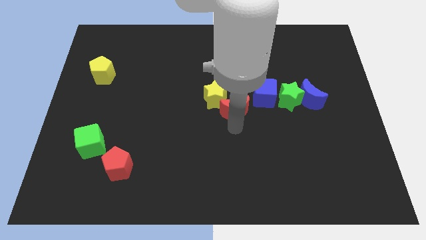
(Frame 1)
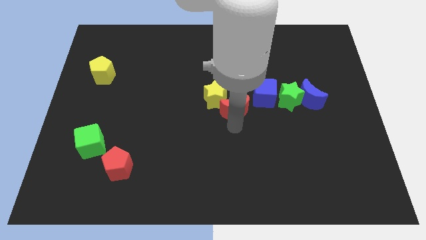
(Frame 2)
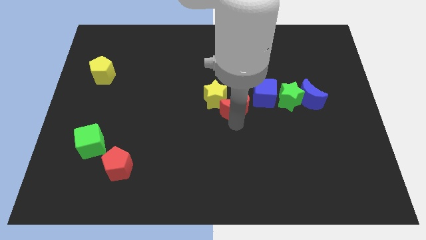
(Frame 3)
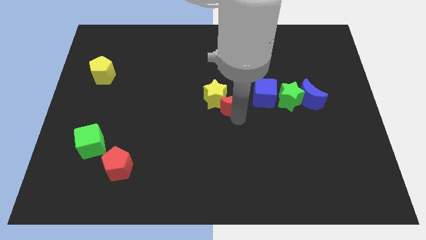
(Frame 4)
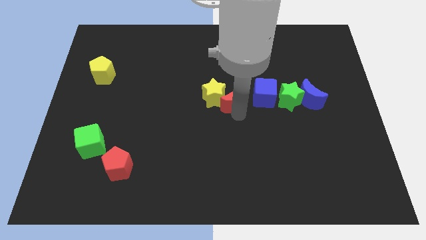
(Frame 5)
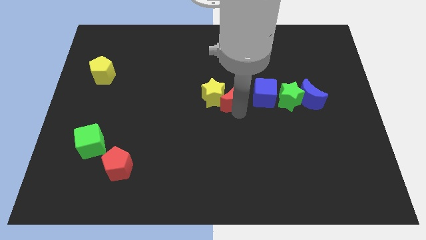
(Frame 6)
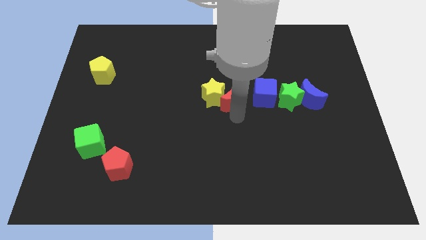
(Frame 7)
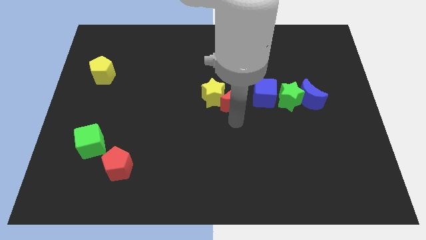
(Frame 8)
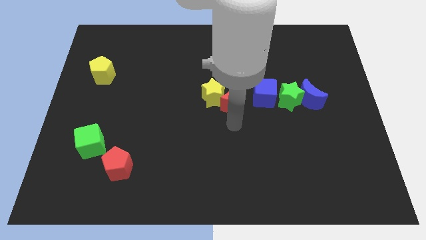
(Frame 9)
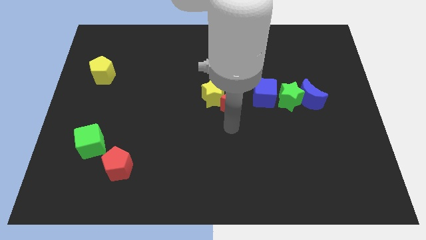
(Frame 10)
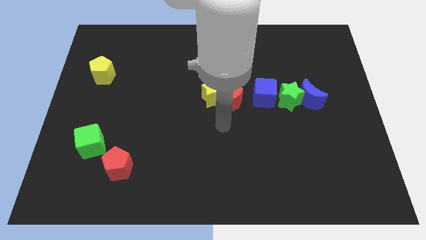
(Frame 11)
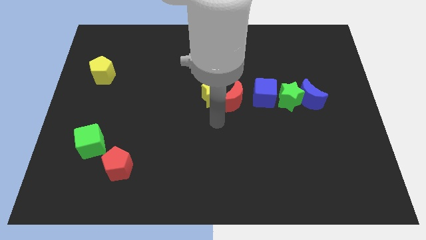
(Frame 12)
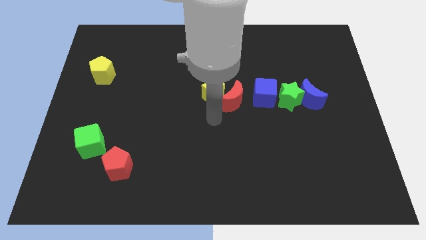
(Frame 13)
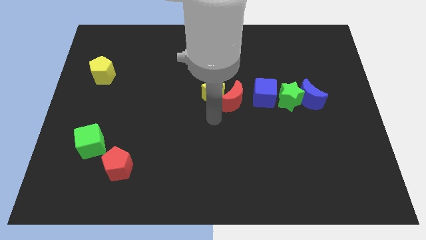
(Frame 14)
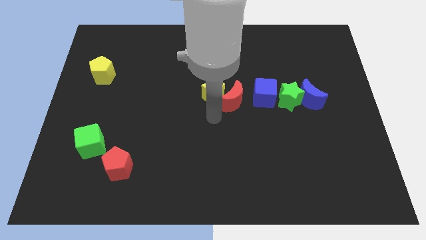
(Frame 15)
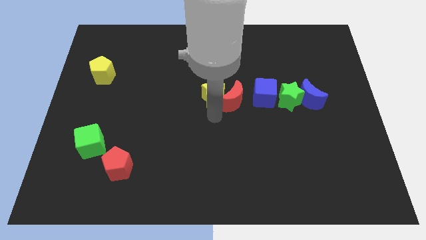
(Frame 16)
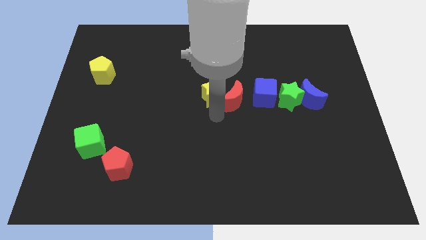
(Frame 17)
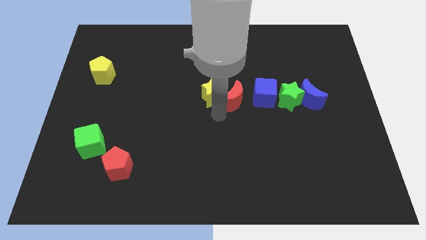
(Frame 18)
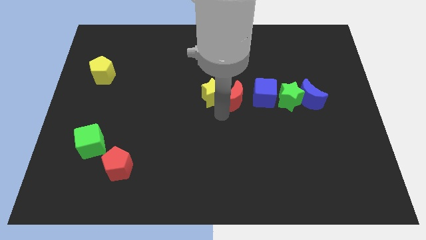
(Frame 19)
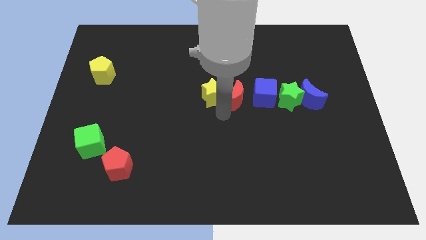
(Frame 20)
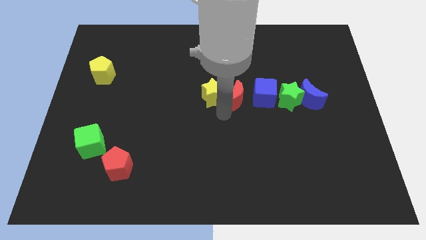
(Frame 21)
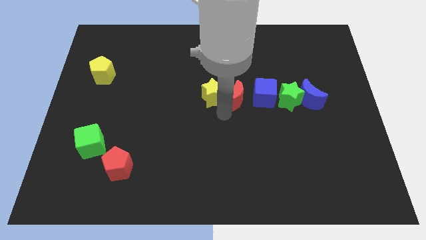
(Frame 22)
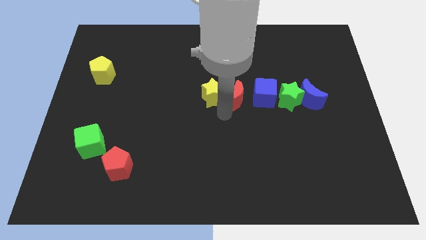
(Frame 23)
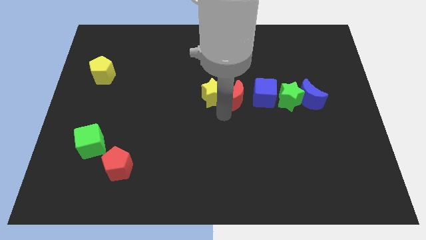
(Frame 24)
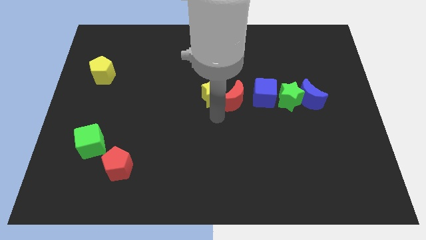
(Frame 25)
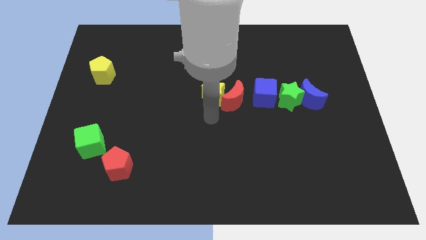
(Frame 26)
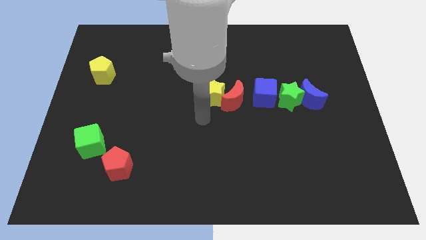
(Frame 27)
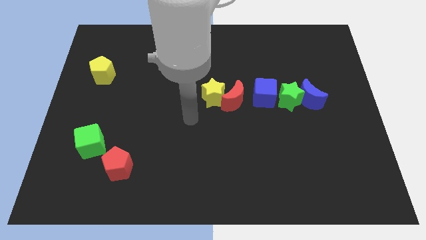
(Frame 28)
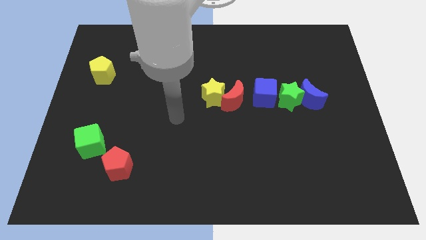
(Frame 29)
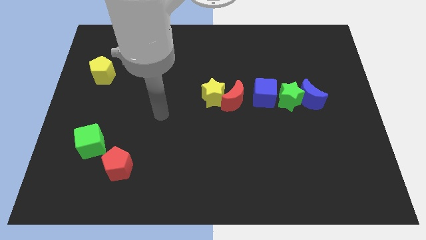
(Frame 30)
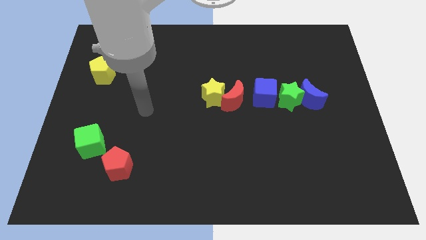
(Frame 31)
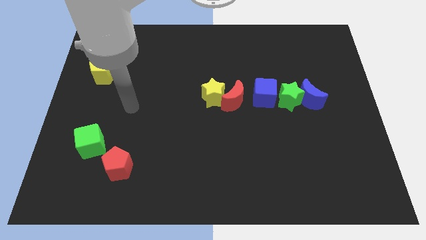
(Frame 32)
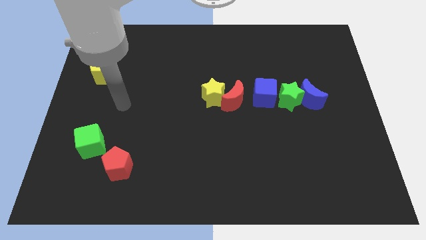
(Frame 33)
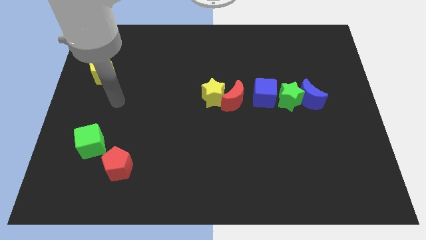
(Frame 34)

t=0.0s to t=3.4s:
place the red crescent right to the yellow star

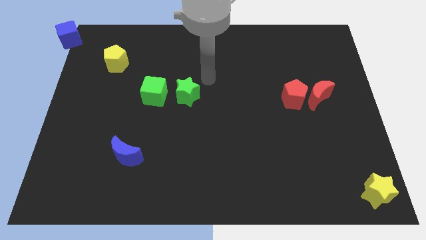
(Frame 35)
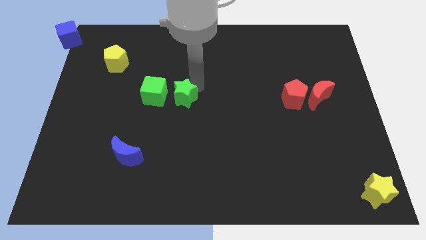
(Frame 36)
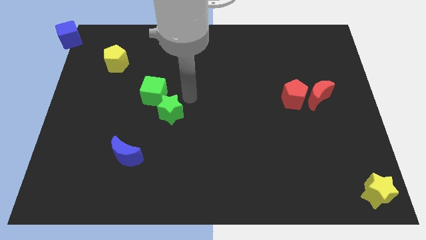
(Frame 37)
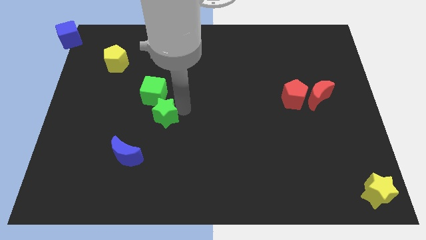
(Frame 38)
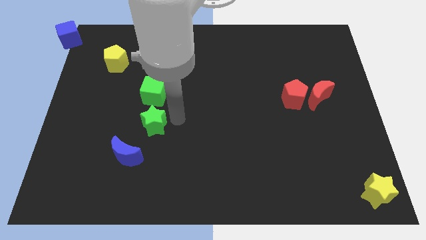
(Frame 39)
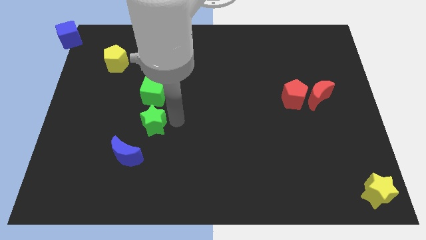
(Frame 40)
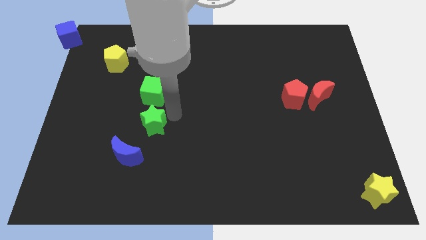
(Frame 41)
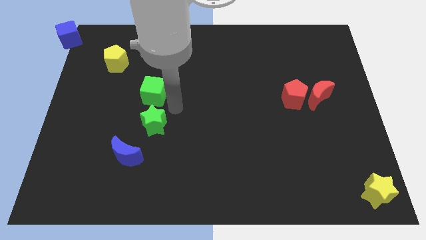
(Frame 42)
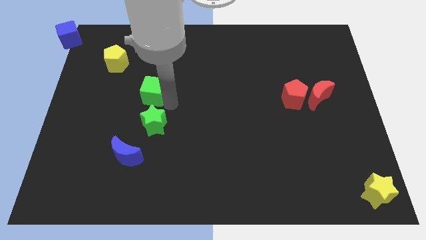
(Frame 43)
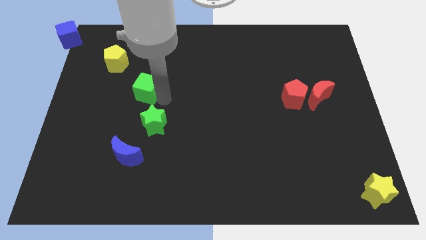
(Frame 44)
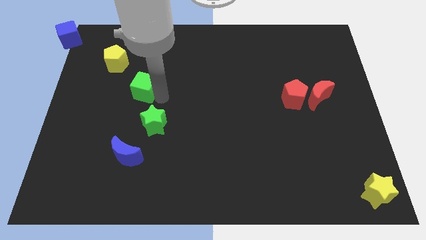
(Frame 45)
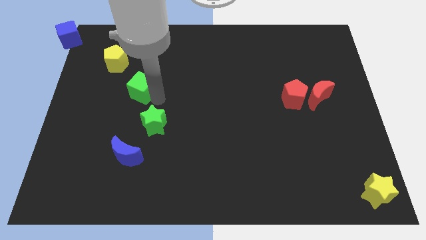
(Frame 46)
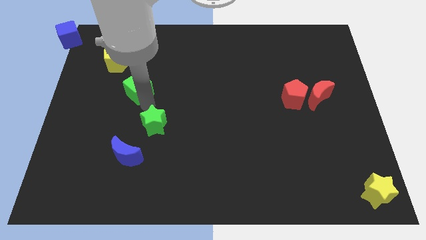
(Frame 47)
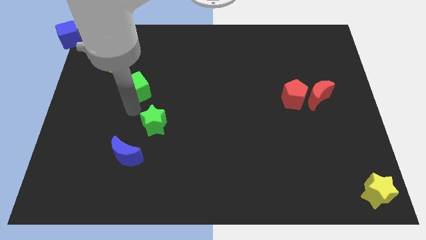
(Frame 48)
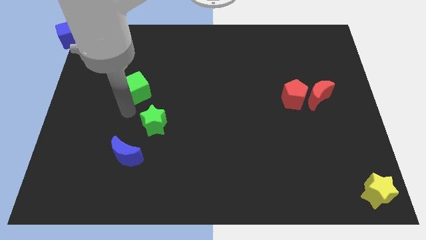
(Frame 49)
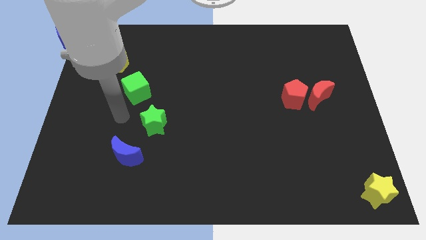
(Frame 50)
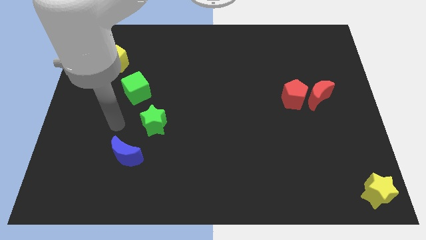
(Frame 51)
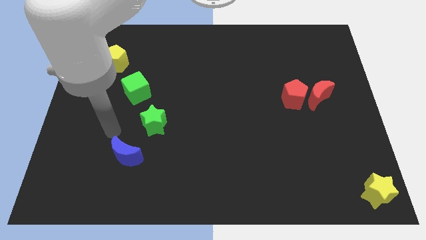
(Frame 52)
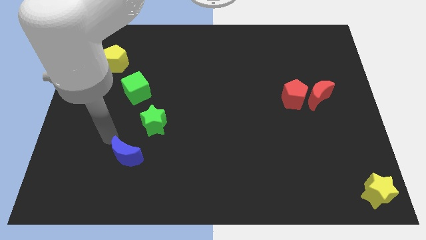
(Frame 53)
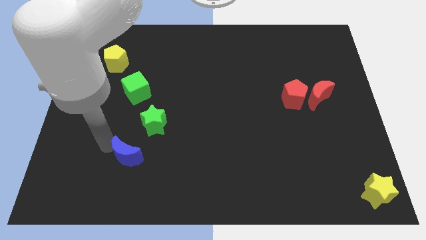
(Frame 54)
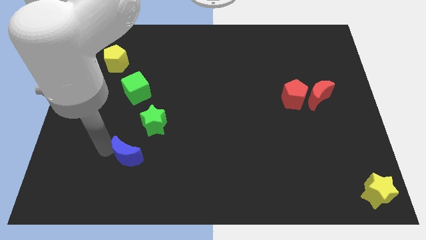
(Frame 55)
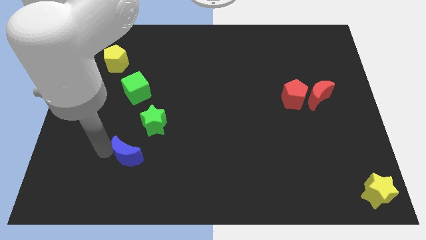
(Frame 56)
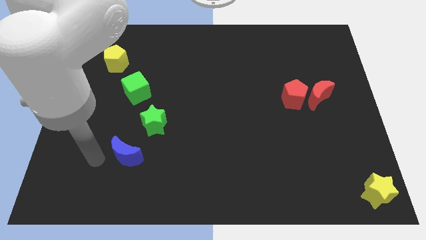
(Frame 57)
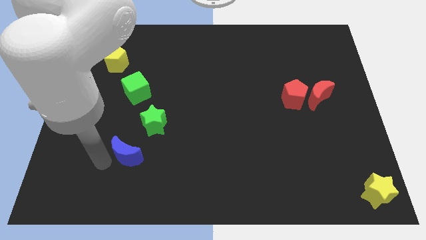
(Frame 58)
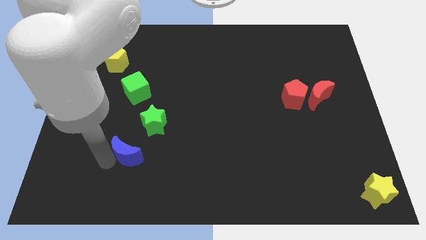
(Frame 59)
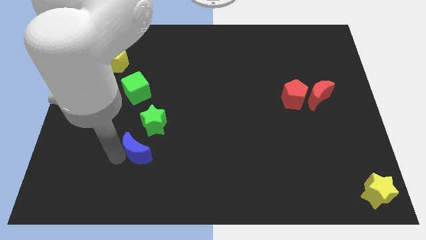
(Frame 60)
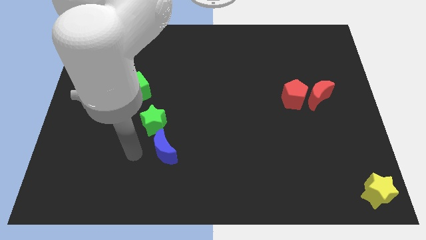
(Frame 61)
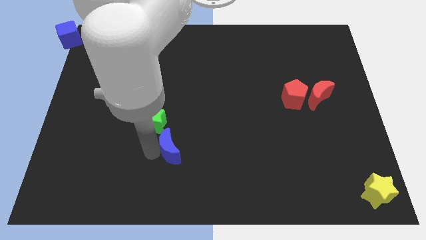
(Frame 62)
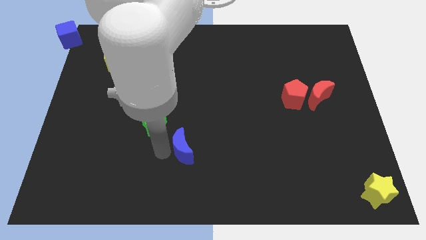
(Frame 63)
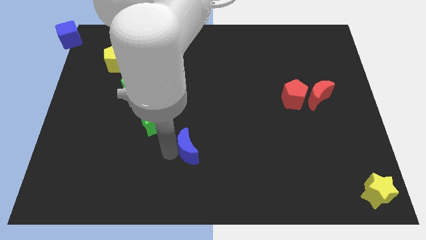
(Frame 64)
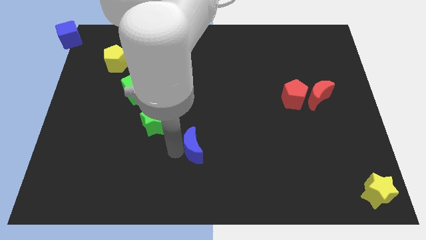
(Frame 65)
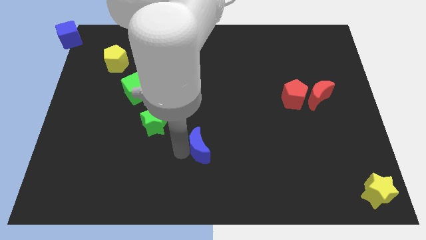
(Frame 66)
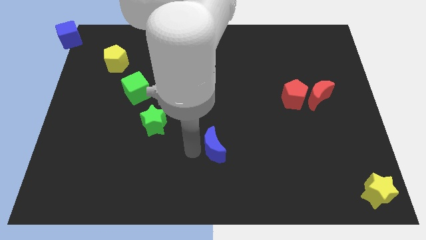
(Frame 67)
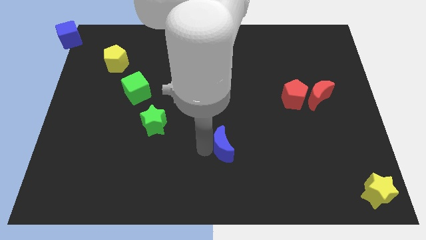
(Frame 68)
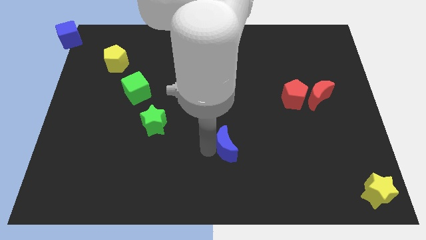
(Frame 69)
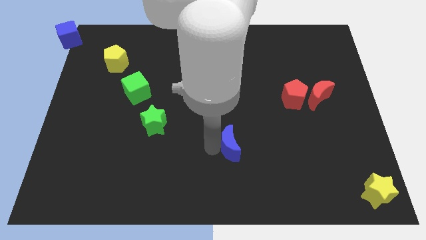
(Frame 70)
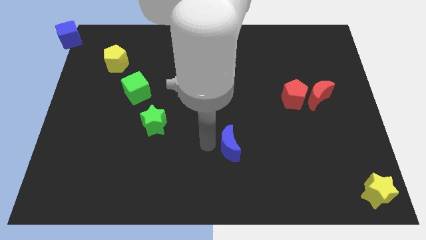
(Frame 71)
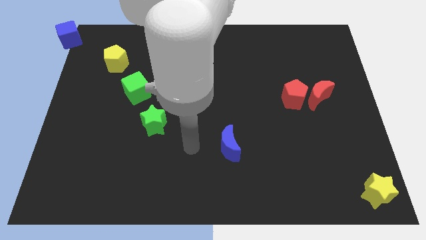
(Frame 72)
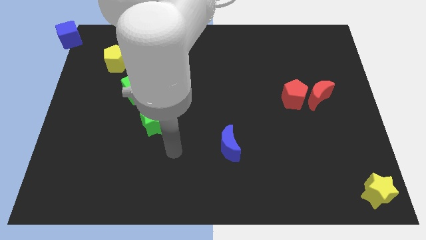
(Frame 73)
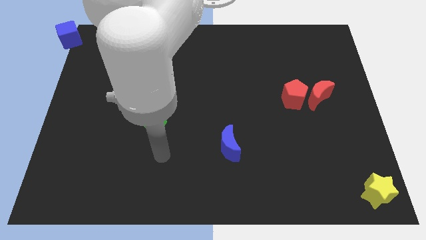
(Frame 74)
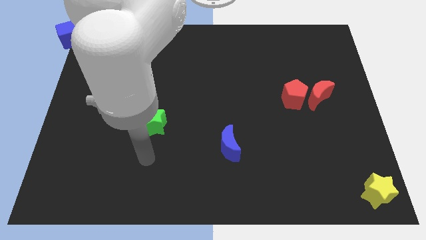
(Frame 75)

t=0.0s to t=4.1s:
move blue moon diagonal to red pentagon

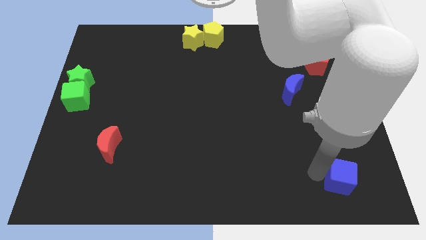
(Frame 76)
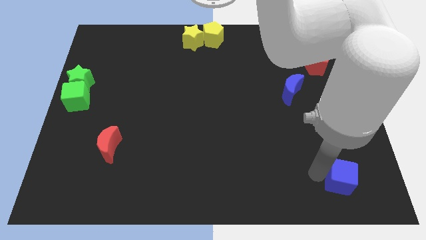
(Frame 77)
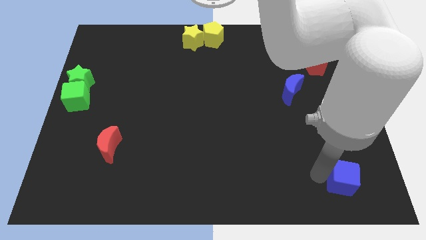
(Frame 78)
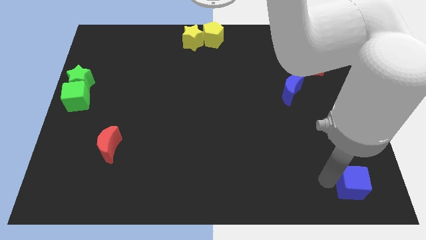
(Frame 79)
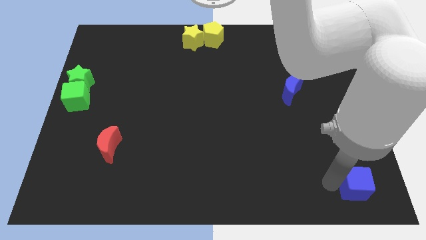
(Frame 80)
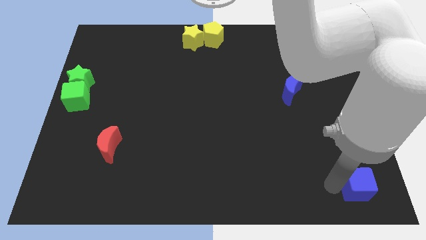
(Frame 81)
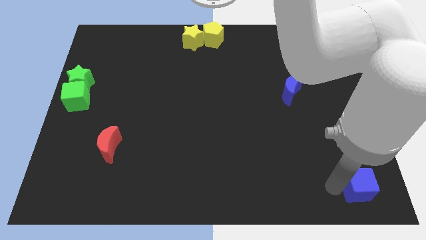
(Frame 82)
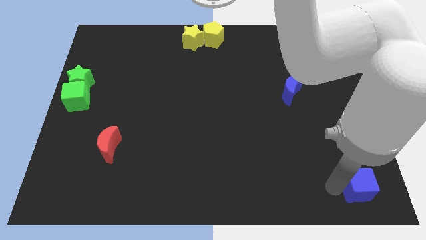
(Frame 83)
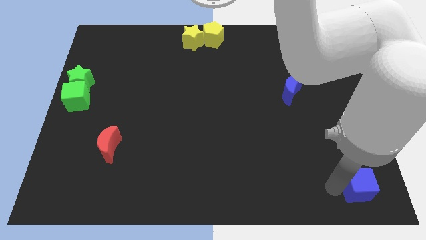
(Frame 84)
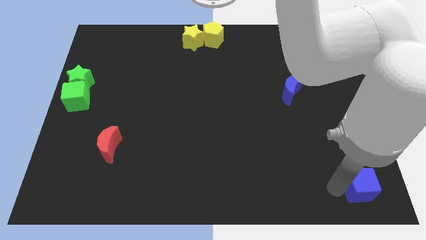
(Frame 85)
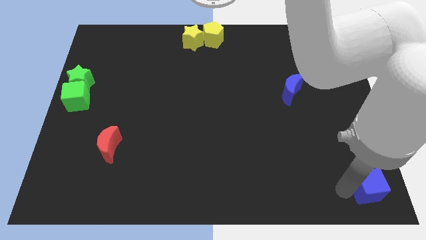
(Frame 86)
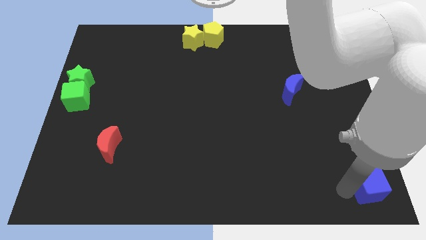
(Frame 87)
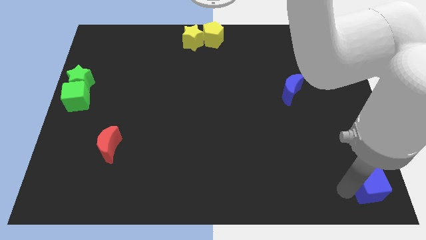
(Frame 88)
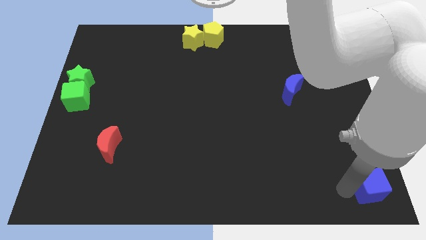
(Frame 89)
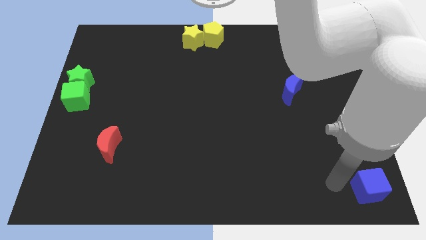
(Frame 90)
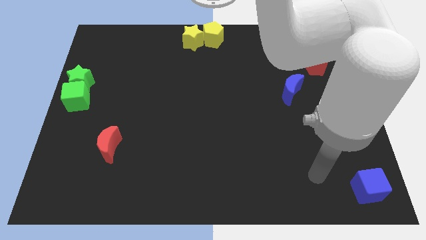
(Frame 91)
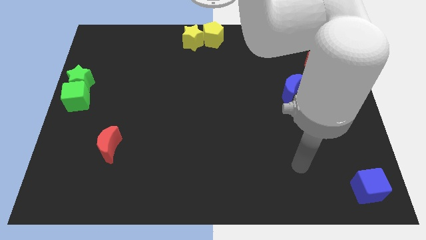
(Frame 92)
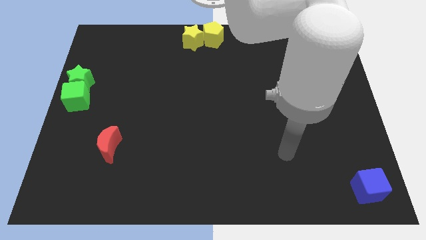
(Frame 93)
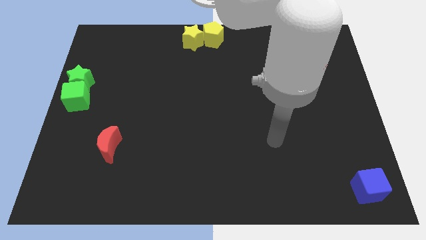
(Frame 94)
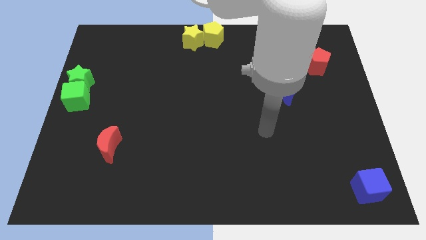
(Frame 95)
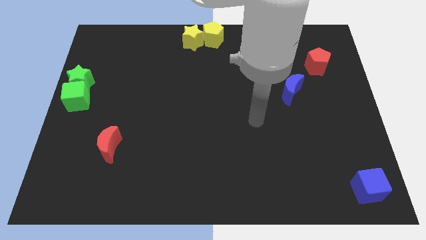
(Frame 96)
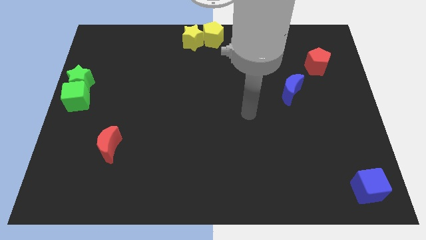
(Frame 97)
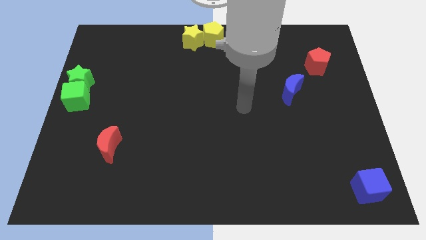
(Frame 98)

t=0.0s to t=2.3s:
move the blue cube to the bottom right corner of the board
